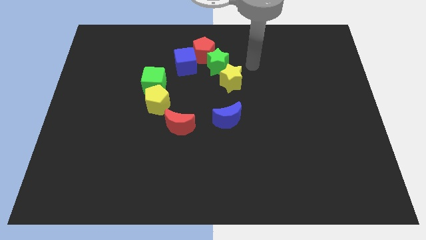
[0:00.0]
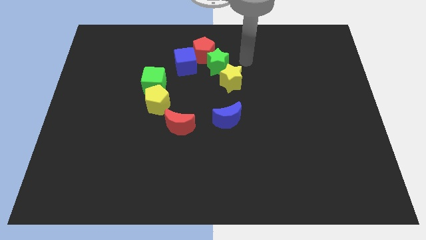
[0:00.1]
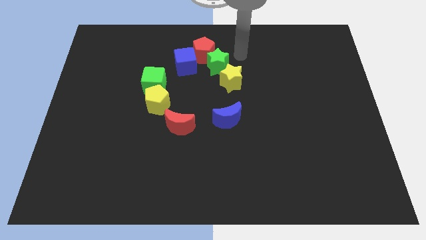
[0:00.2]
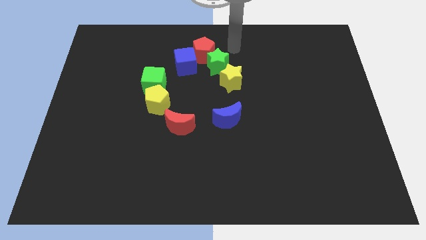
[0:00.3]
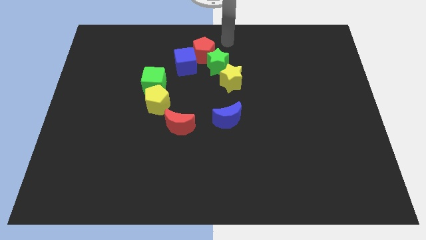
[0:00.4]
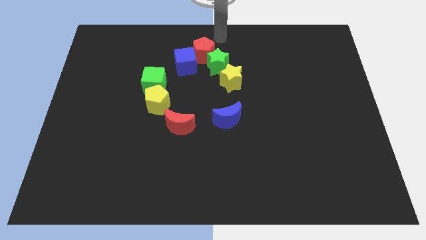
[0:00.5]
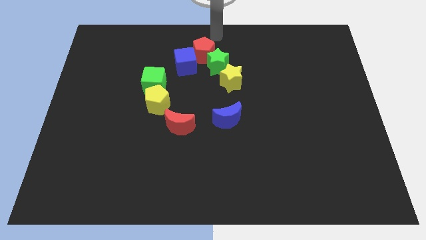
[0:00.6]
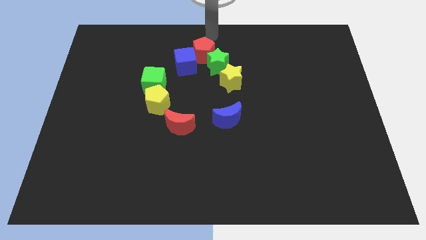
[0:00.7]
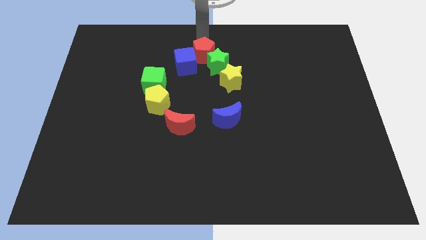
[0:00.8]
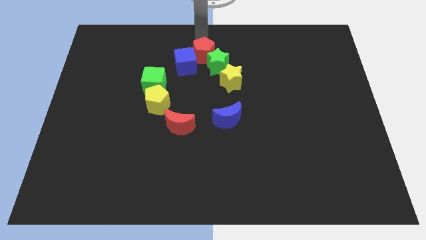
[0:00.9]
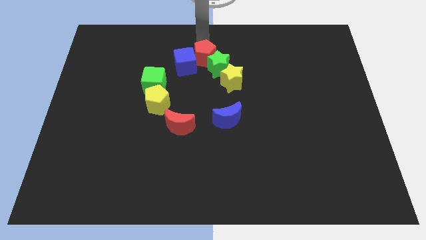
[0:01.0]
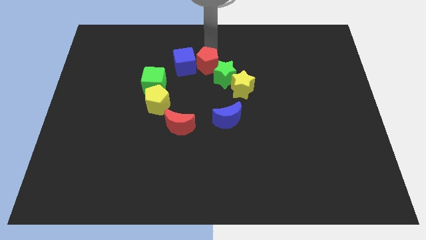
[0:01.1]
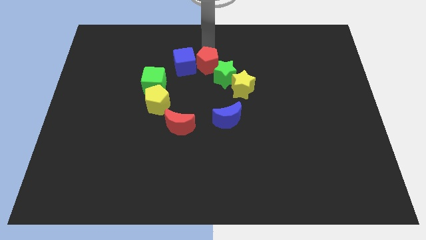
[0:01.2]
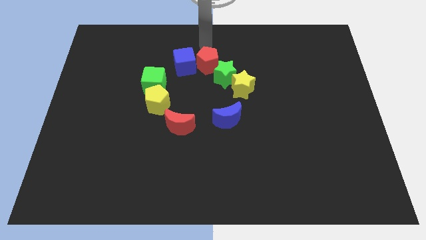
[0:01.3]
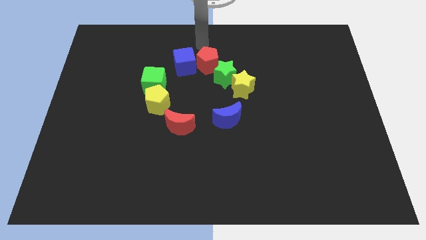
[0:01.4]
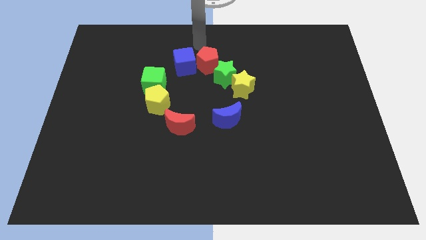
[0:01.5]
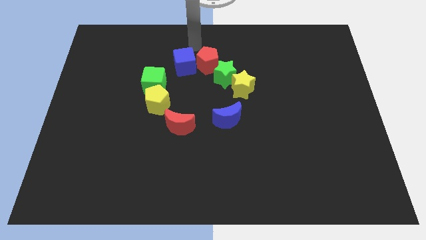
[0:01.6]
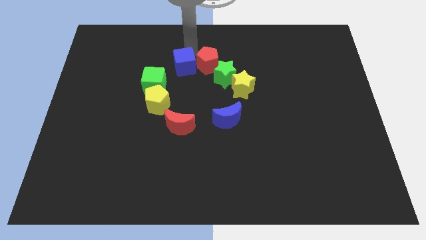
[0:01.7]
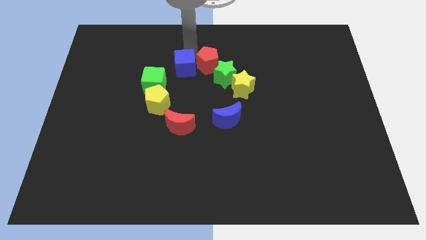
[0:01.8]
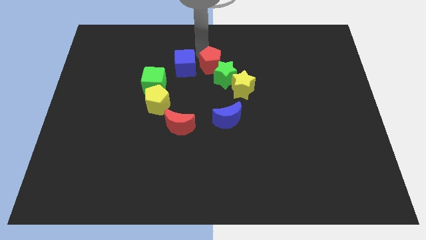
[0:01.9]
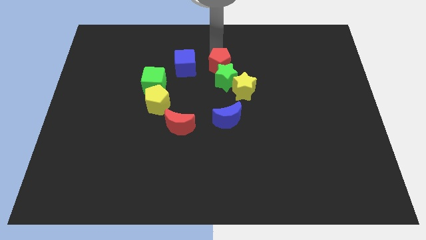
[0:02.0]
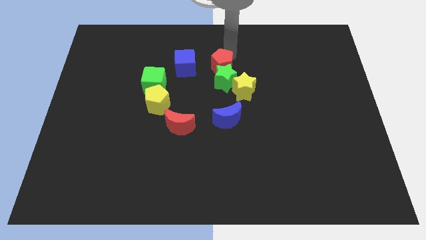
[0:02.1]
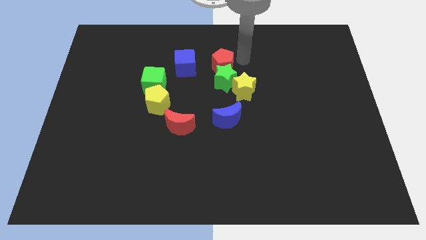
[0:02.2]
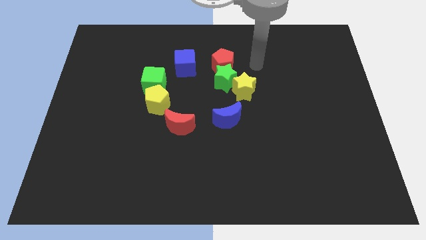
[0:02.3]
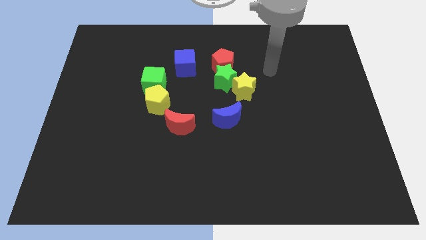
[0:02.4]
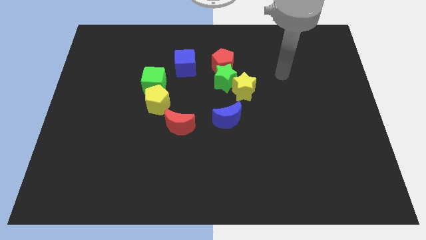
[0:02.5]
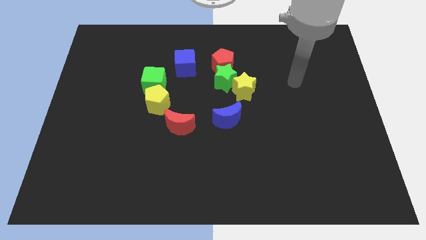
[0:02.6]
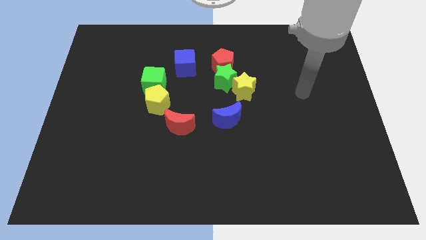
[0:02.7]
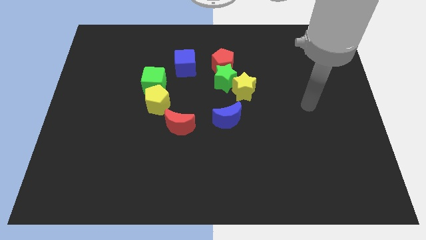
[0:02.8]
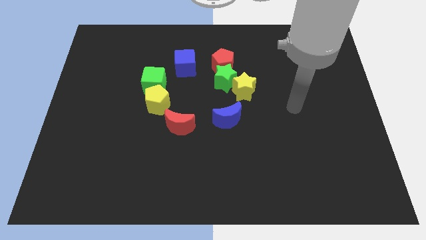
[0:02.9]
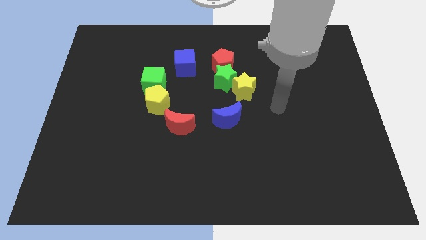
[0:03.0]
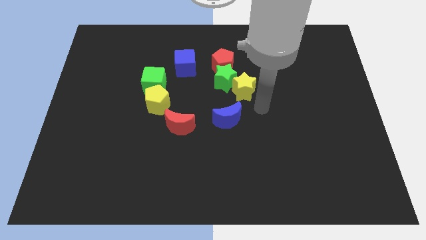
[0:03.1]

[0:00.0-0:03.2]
separate the diagonal line of blocks from the blue cube

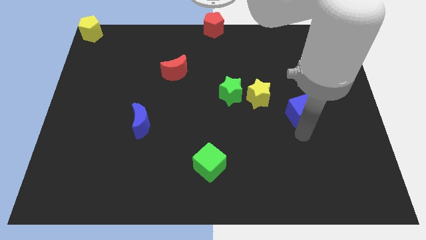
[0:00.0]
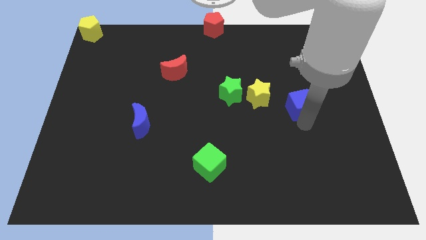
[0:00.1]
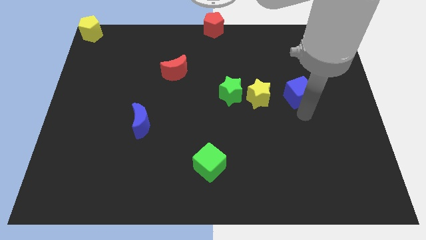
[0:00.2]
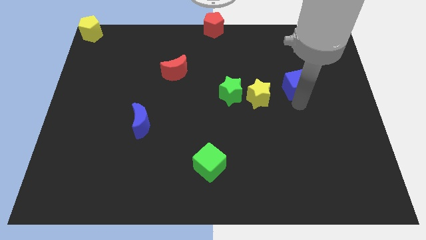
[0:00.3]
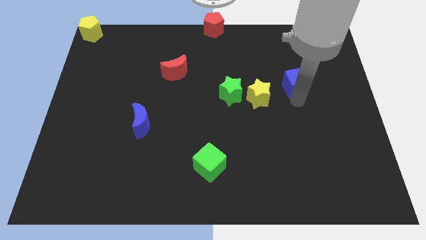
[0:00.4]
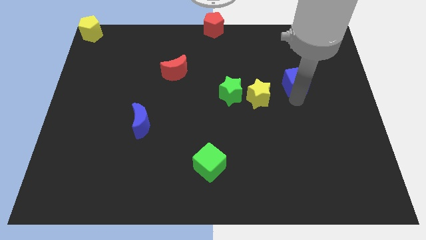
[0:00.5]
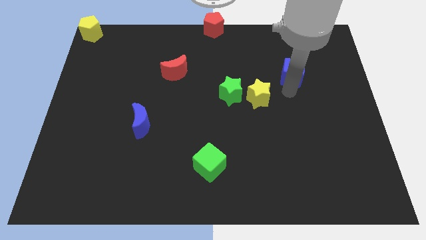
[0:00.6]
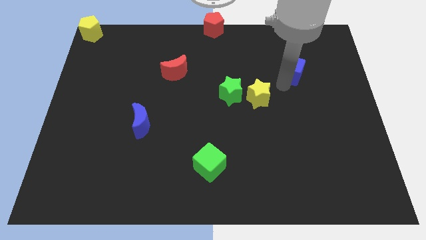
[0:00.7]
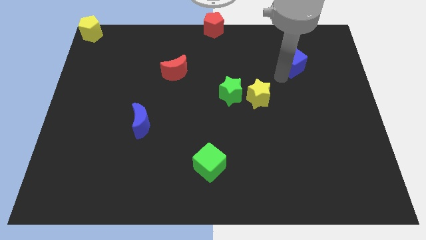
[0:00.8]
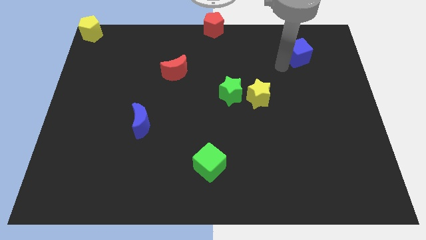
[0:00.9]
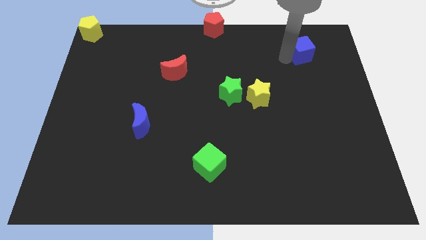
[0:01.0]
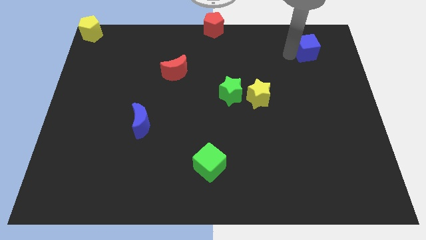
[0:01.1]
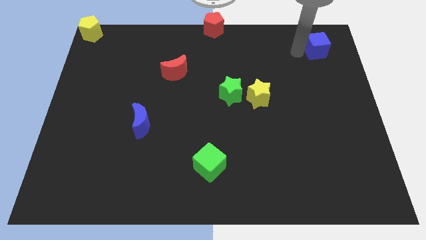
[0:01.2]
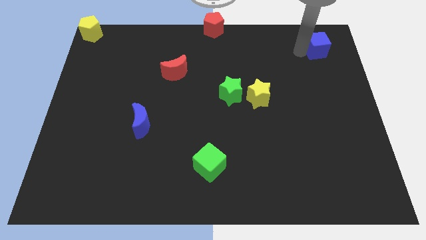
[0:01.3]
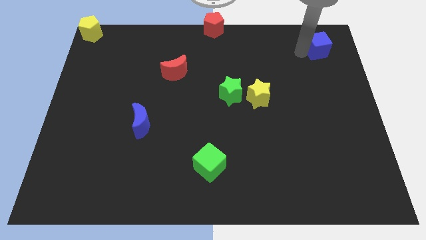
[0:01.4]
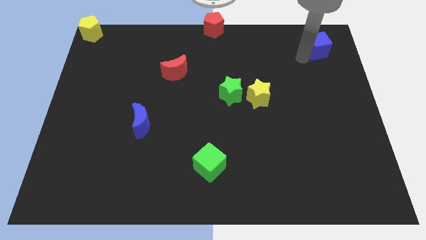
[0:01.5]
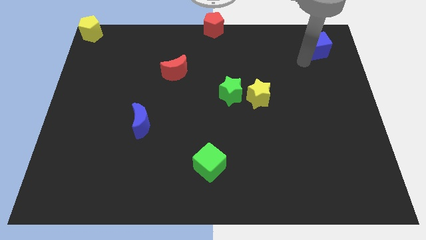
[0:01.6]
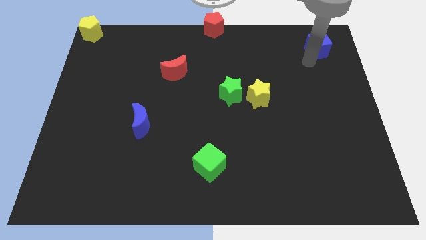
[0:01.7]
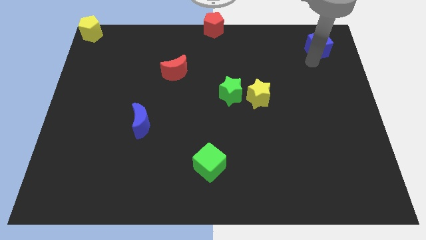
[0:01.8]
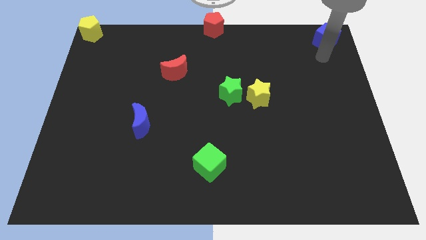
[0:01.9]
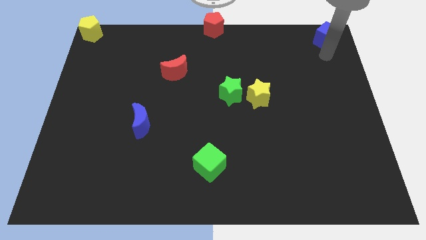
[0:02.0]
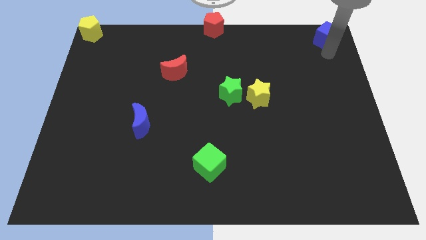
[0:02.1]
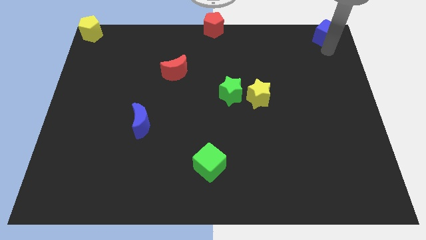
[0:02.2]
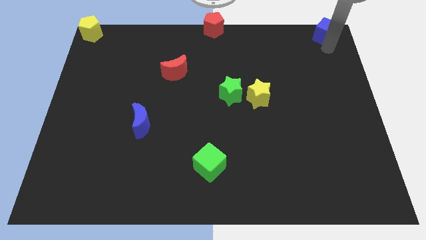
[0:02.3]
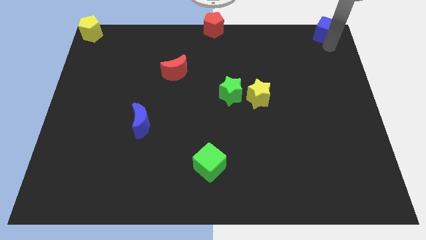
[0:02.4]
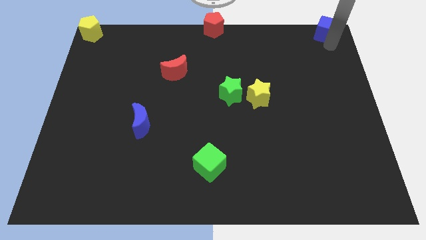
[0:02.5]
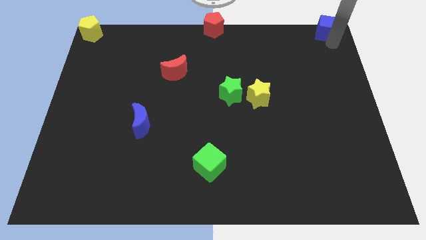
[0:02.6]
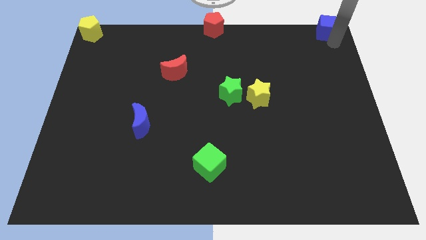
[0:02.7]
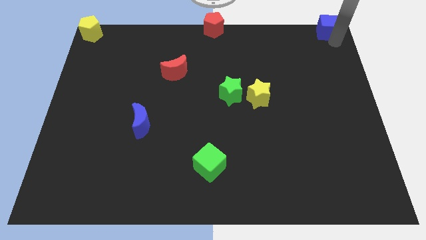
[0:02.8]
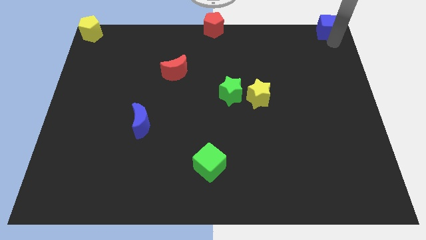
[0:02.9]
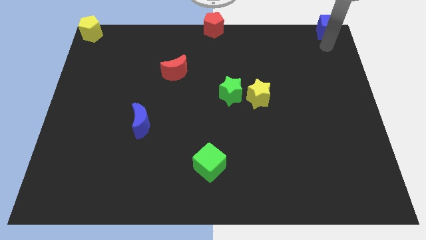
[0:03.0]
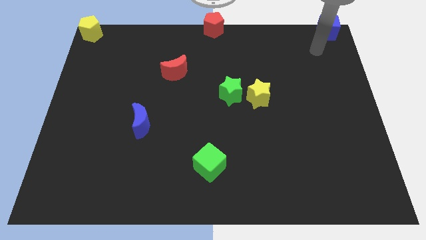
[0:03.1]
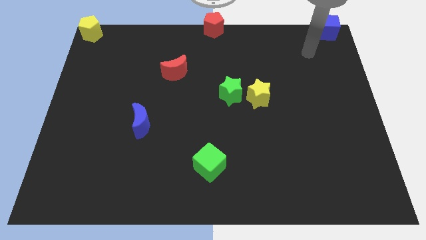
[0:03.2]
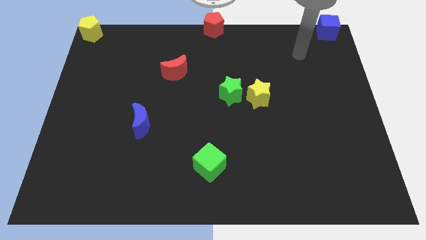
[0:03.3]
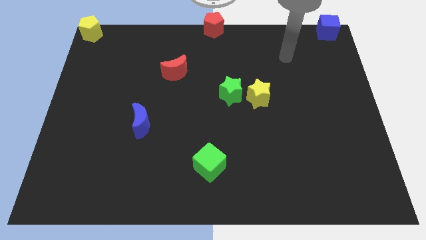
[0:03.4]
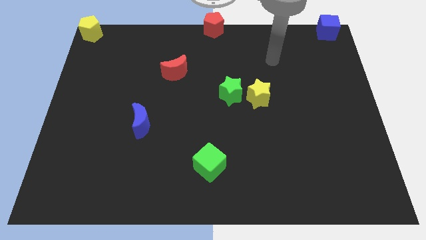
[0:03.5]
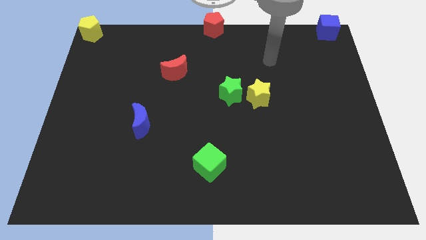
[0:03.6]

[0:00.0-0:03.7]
move blue cube to the top right corner of the board

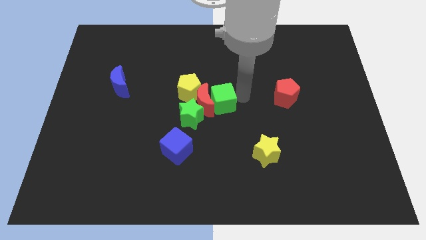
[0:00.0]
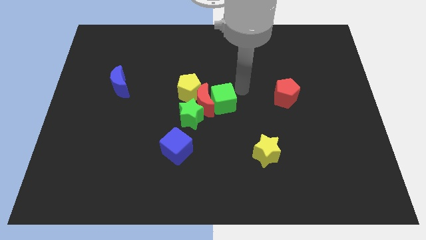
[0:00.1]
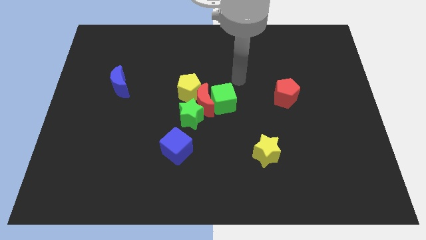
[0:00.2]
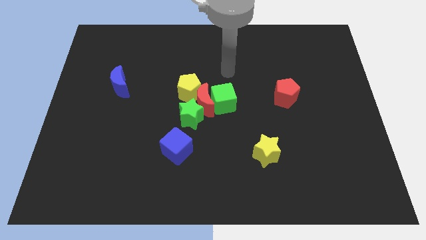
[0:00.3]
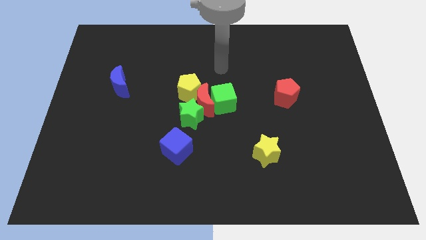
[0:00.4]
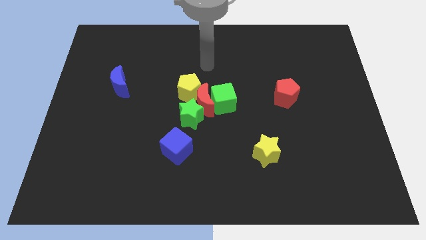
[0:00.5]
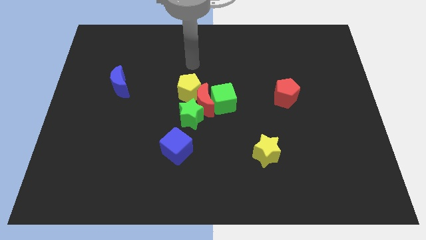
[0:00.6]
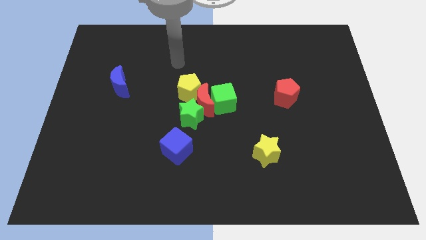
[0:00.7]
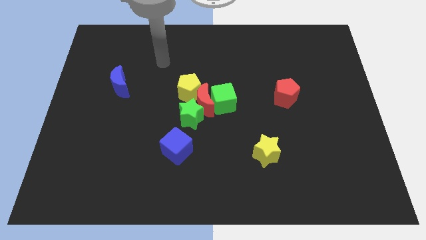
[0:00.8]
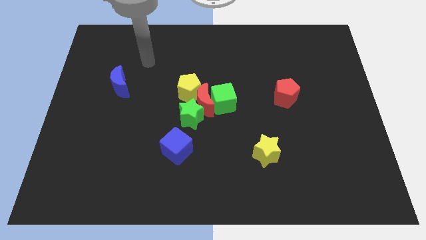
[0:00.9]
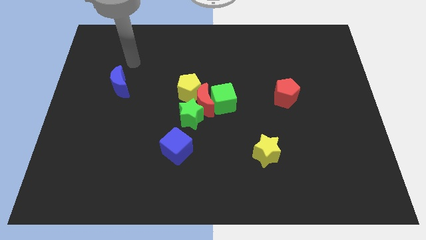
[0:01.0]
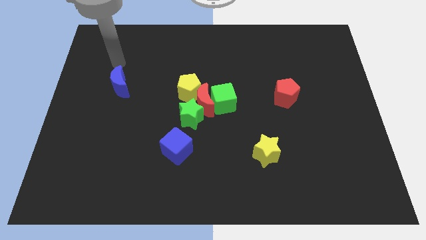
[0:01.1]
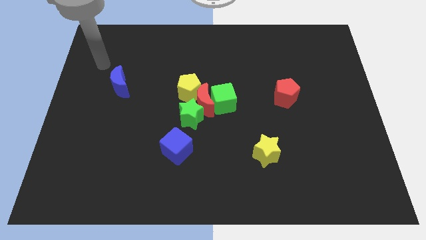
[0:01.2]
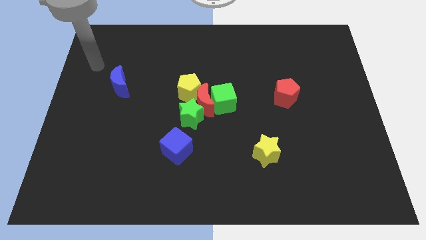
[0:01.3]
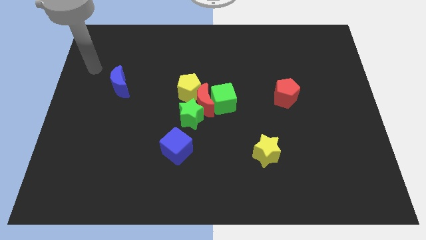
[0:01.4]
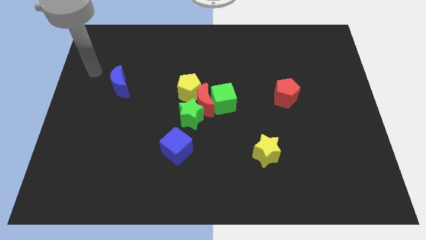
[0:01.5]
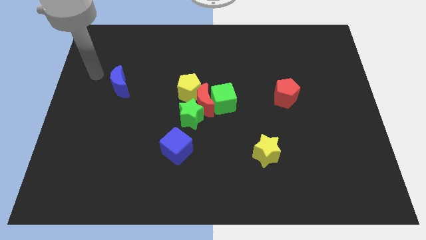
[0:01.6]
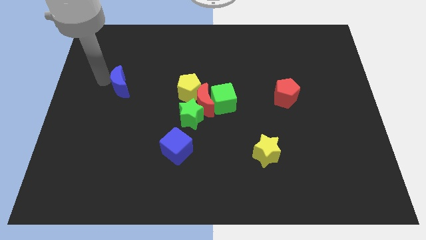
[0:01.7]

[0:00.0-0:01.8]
move your arm to the left of the blue crescent

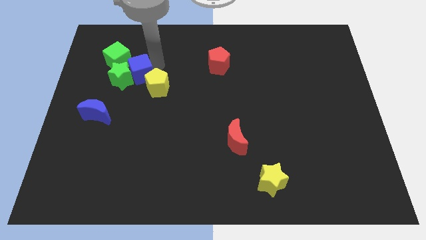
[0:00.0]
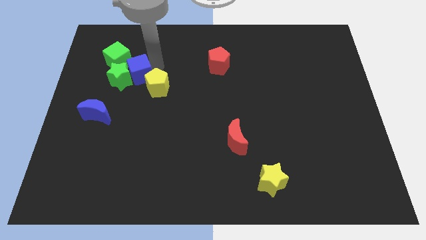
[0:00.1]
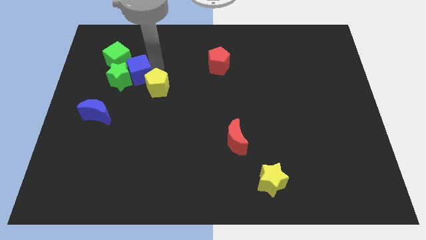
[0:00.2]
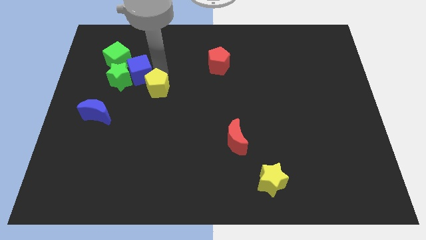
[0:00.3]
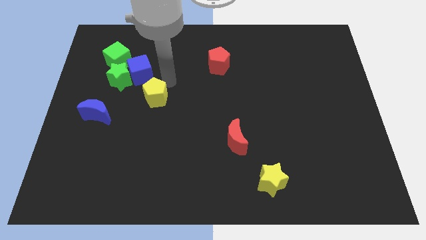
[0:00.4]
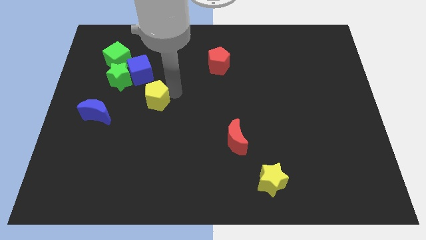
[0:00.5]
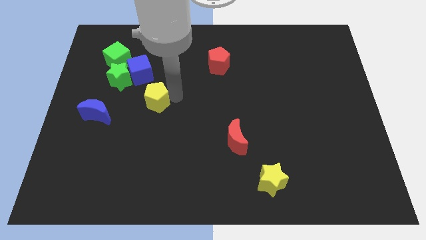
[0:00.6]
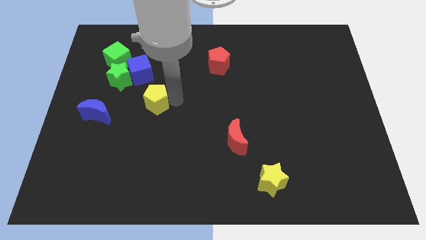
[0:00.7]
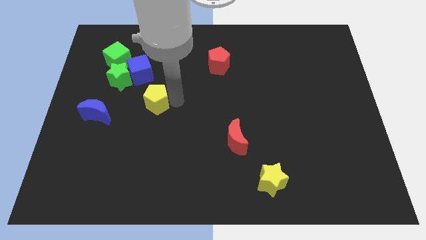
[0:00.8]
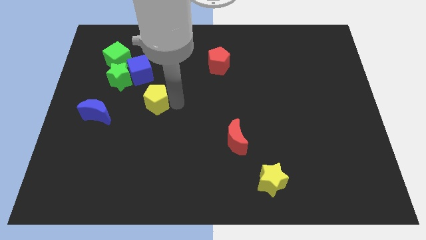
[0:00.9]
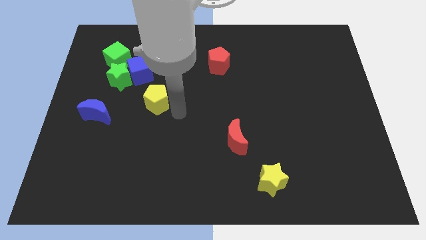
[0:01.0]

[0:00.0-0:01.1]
push yellow pentagon slightly towards down
